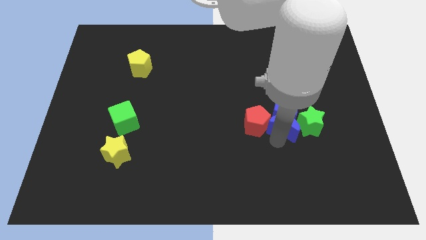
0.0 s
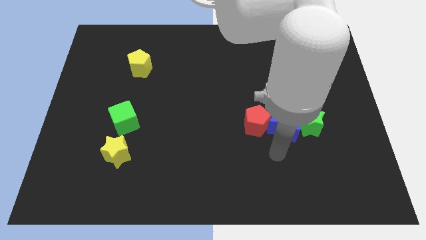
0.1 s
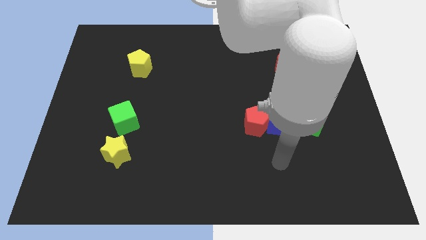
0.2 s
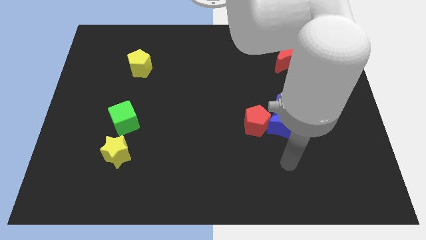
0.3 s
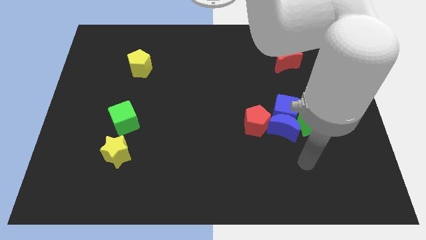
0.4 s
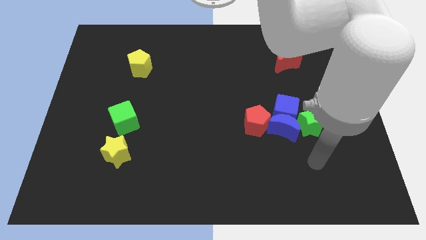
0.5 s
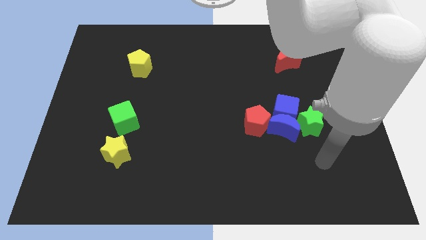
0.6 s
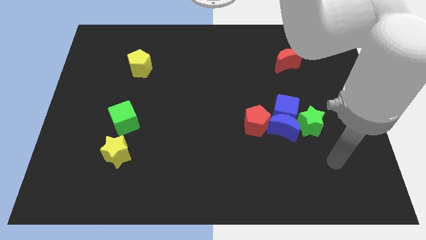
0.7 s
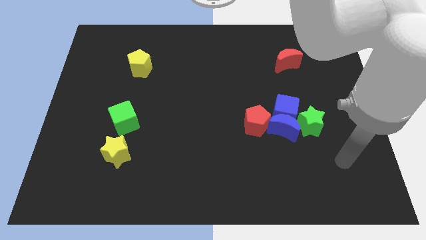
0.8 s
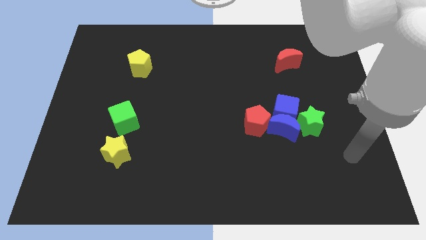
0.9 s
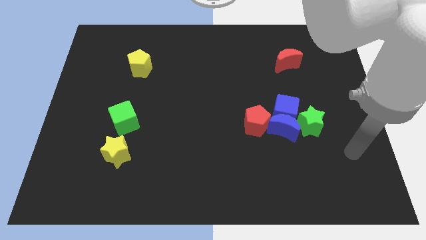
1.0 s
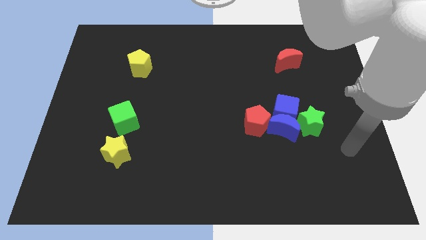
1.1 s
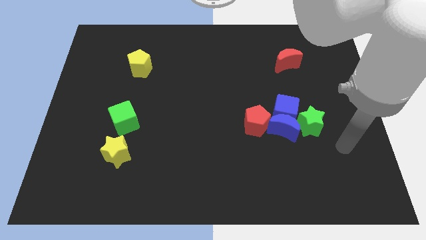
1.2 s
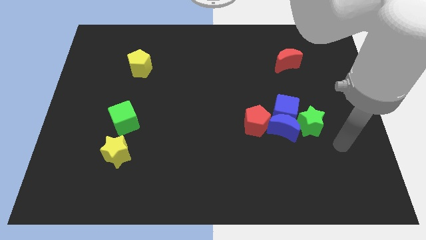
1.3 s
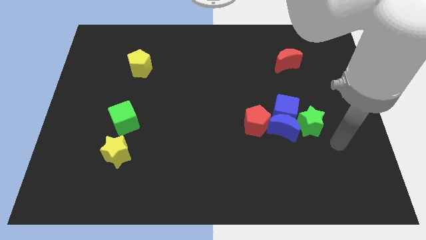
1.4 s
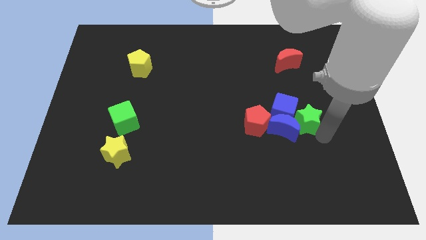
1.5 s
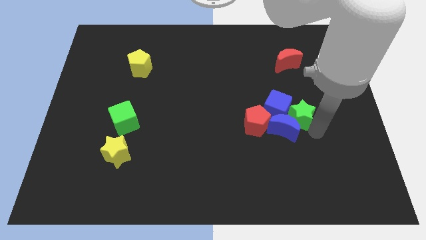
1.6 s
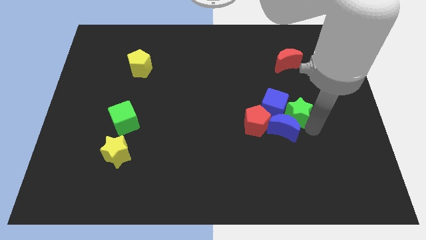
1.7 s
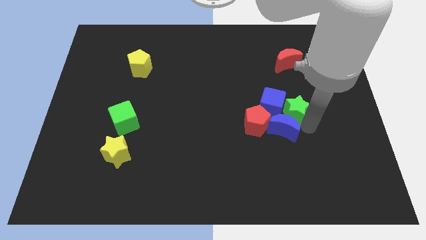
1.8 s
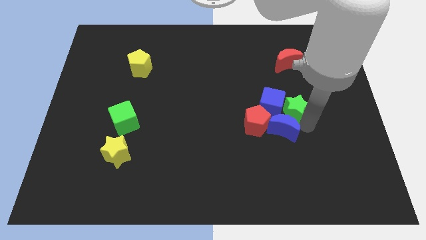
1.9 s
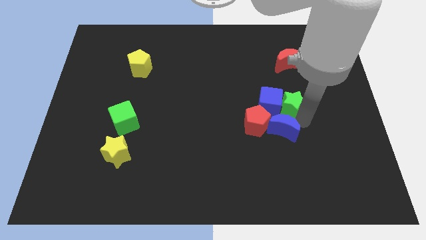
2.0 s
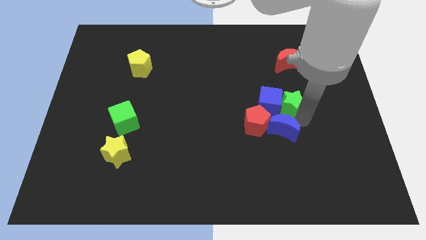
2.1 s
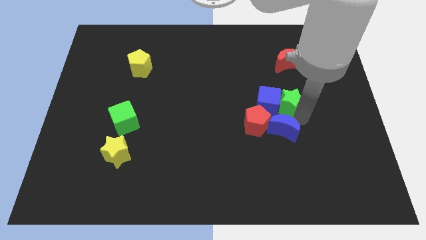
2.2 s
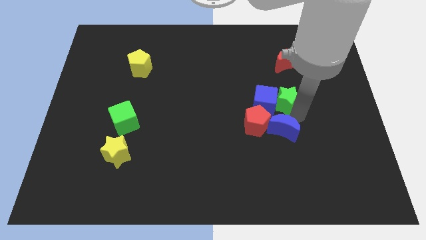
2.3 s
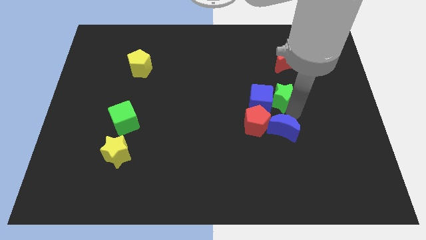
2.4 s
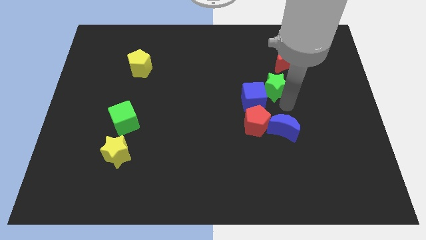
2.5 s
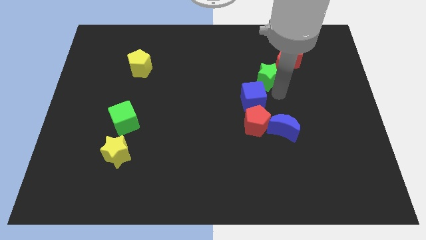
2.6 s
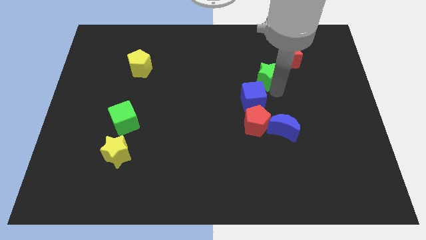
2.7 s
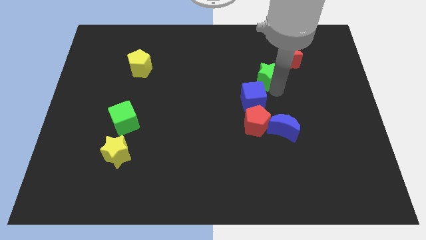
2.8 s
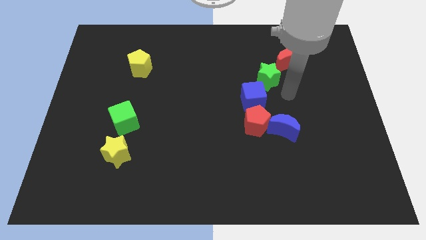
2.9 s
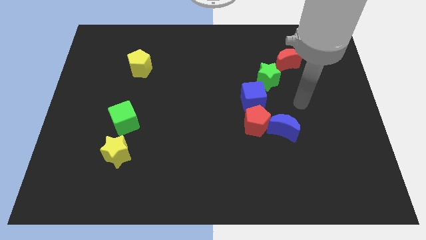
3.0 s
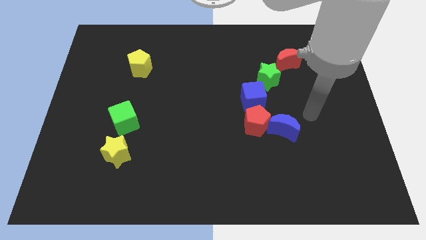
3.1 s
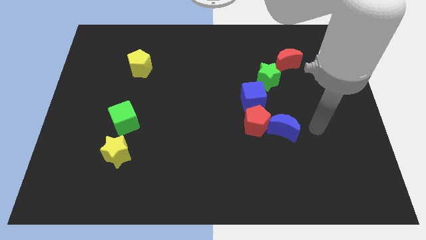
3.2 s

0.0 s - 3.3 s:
push the green star left to the red moon

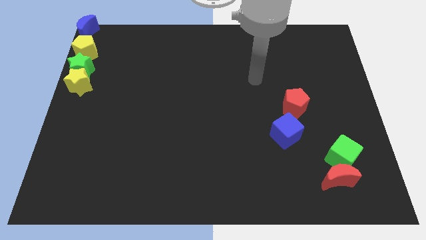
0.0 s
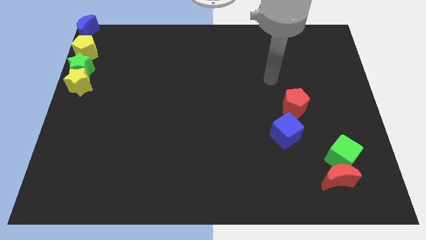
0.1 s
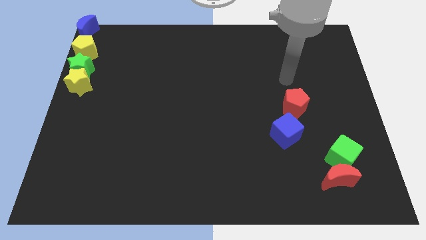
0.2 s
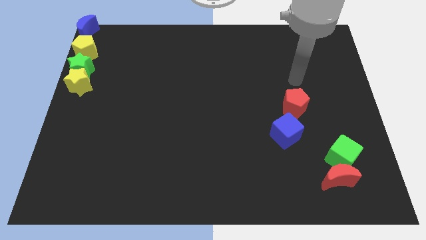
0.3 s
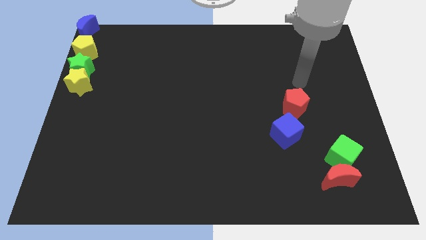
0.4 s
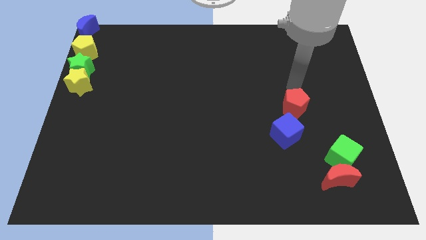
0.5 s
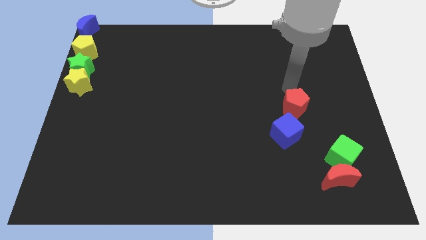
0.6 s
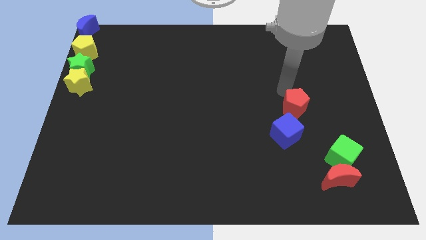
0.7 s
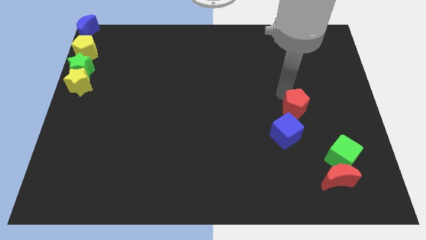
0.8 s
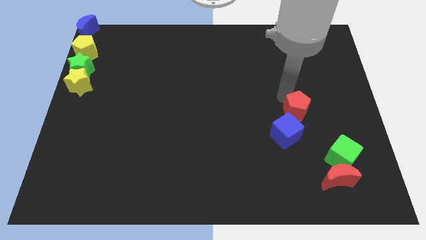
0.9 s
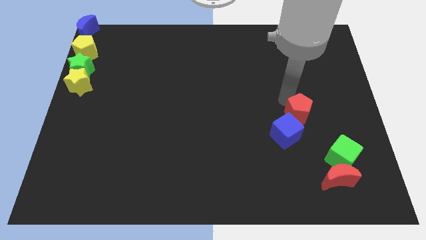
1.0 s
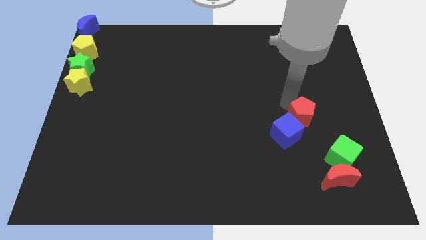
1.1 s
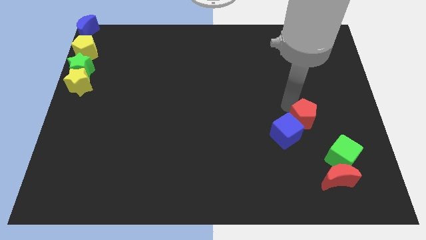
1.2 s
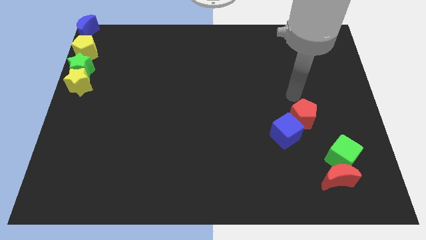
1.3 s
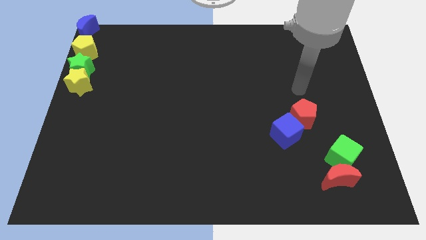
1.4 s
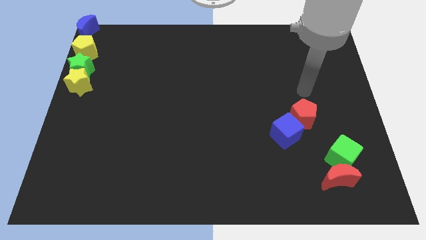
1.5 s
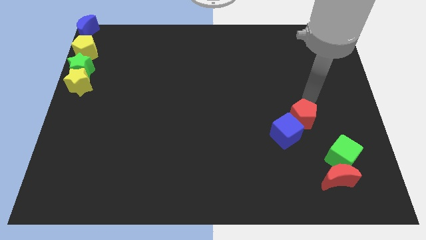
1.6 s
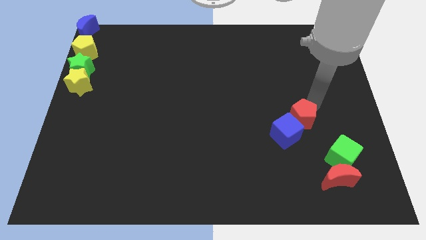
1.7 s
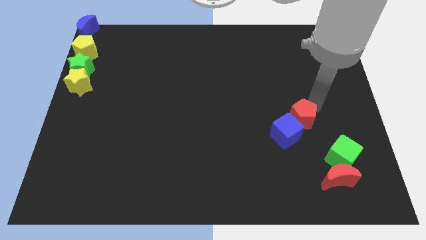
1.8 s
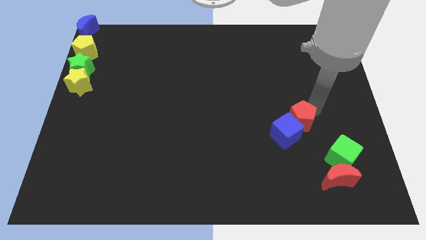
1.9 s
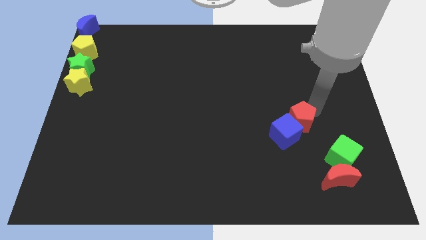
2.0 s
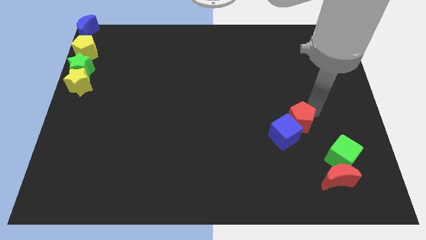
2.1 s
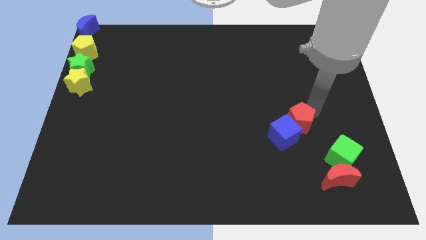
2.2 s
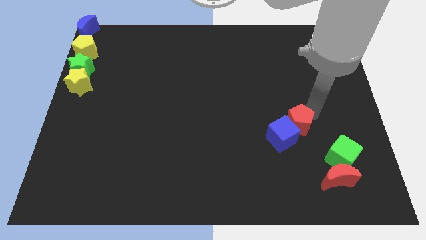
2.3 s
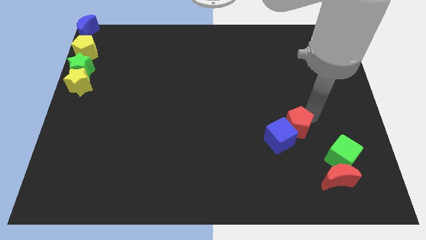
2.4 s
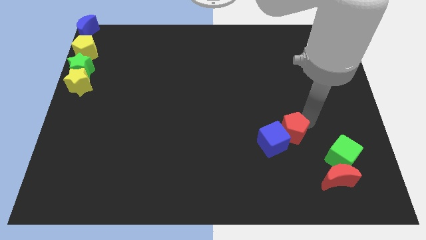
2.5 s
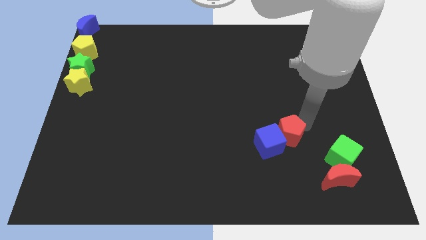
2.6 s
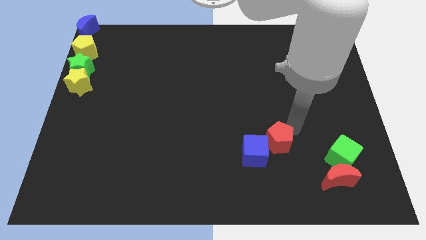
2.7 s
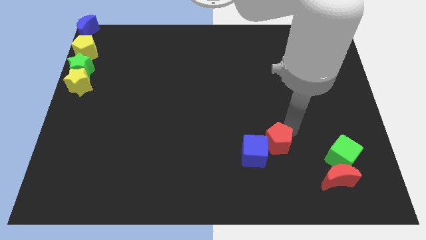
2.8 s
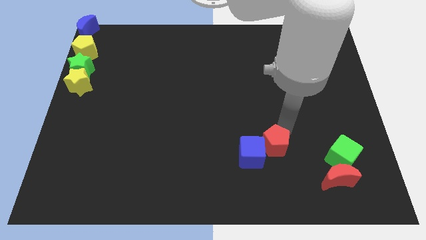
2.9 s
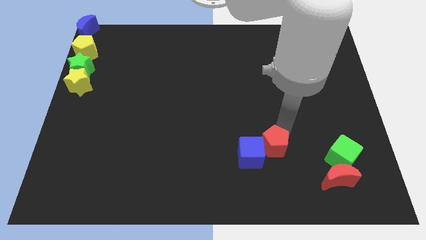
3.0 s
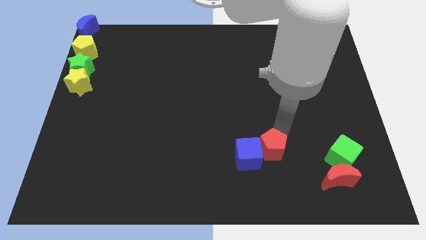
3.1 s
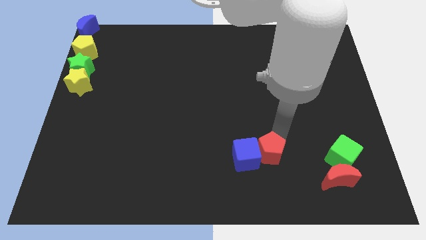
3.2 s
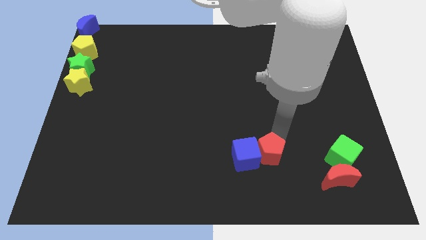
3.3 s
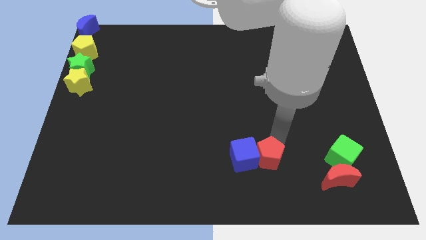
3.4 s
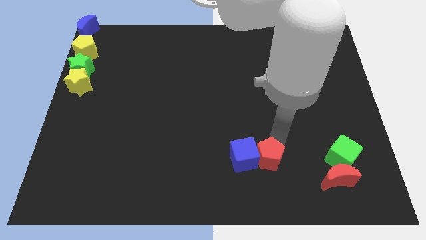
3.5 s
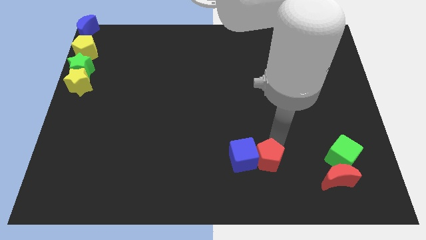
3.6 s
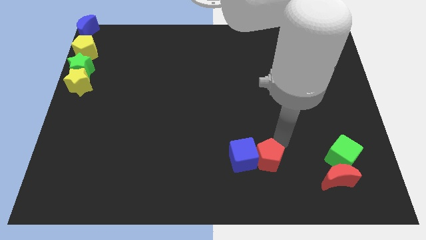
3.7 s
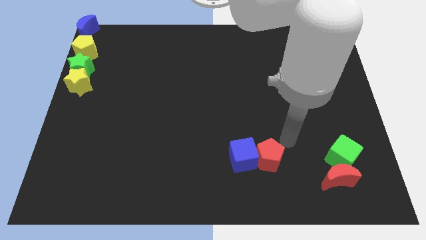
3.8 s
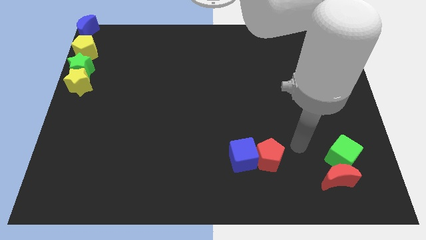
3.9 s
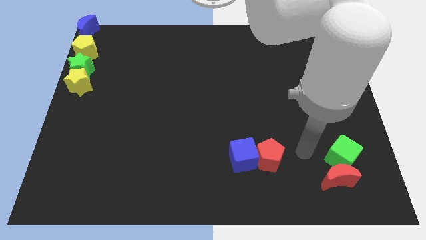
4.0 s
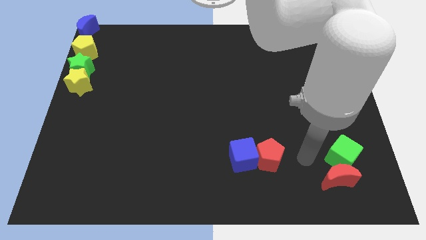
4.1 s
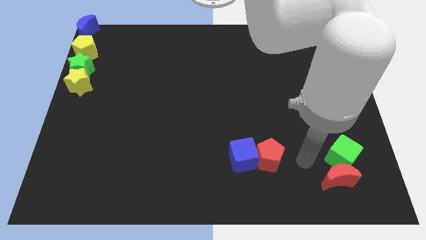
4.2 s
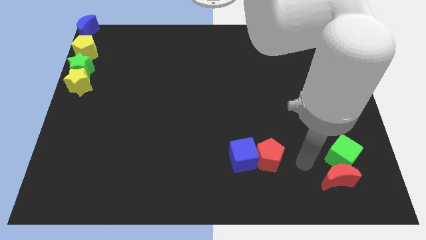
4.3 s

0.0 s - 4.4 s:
move the red pentagon with the blue cub

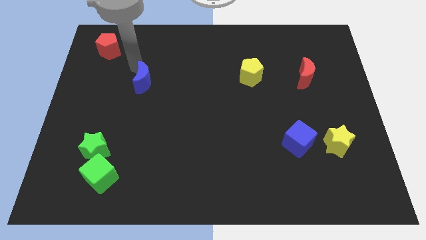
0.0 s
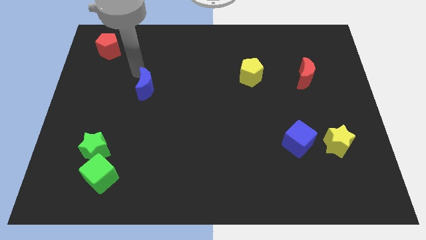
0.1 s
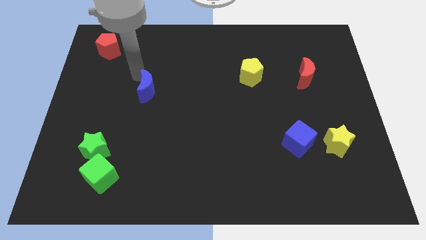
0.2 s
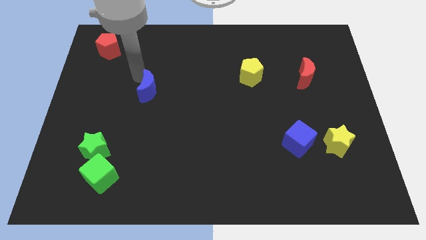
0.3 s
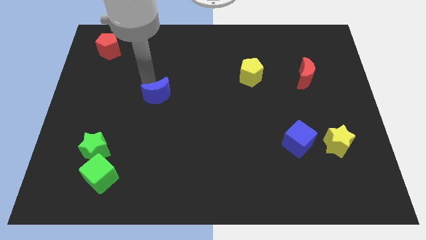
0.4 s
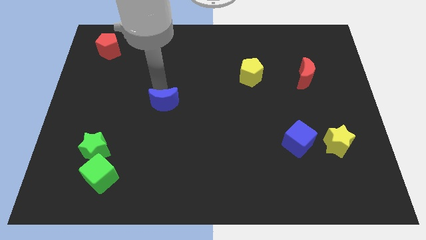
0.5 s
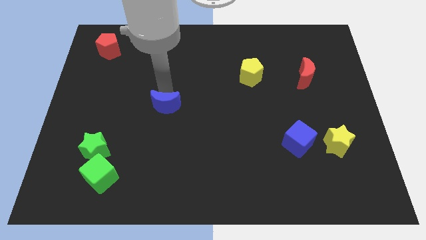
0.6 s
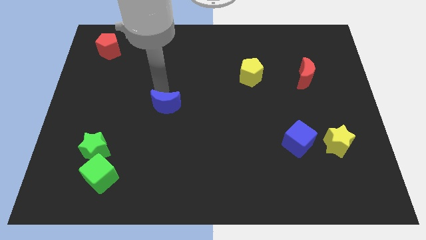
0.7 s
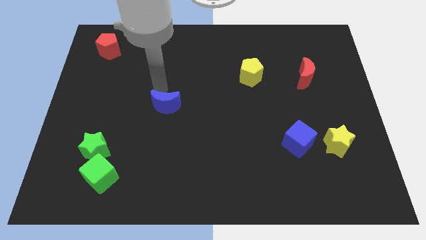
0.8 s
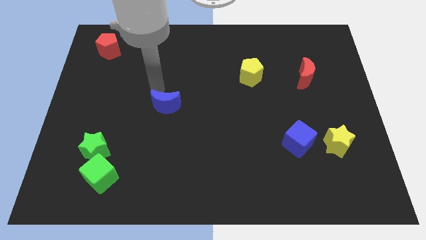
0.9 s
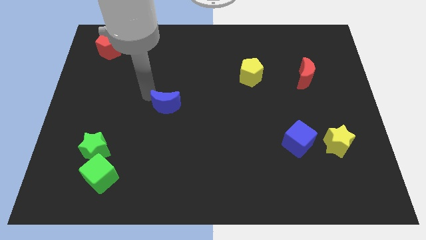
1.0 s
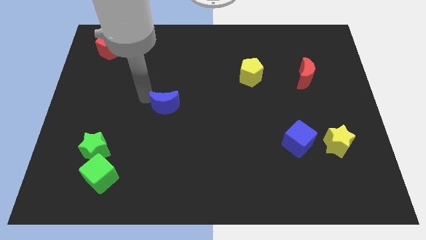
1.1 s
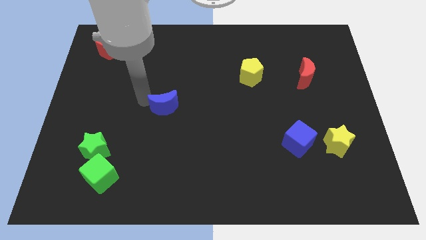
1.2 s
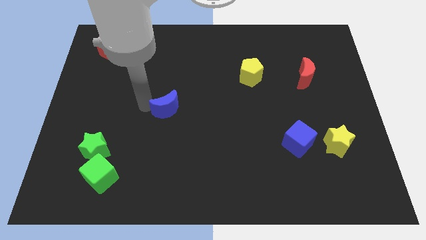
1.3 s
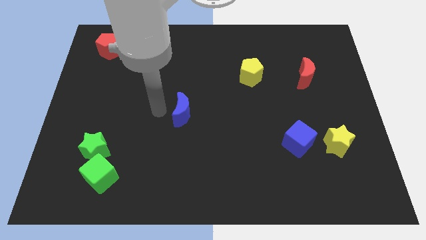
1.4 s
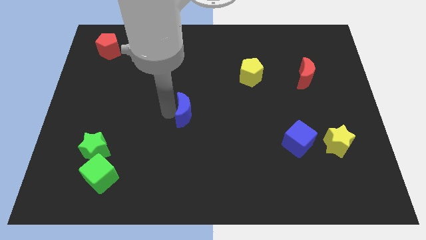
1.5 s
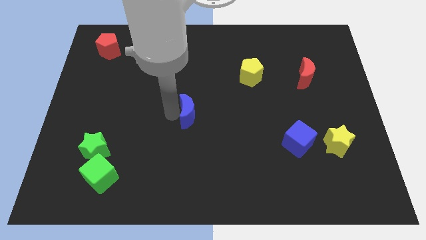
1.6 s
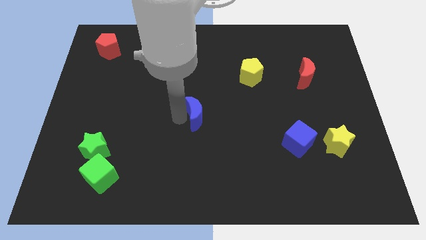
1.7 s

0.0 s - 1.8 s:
move the blue crescent to the center of the board
